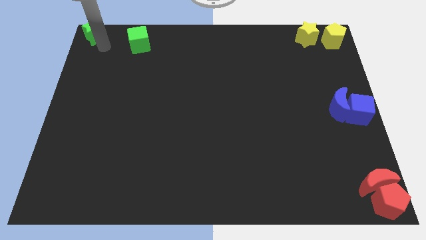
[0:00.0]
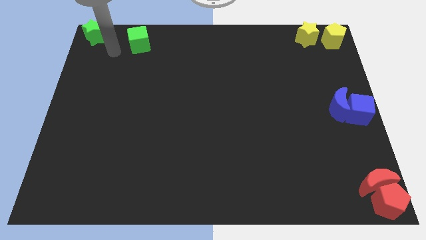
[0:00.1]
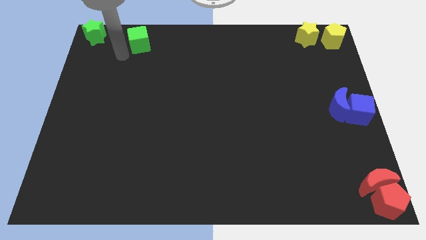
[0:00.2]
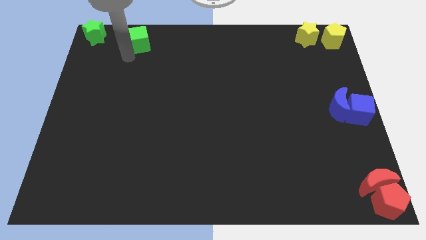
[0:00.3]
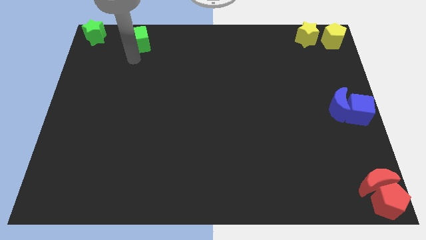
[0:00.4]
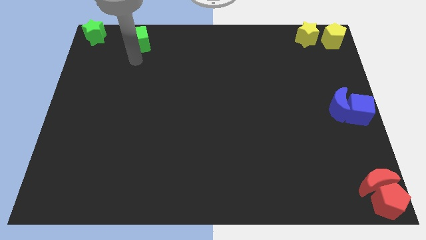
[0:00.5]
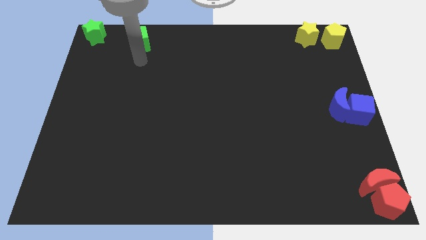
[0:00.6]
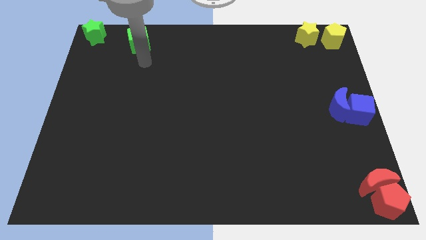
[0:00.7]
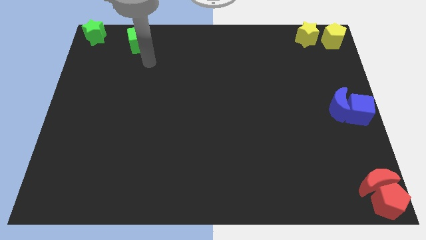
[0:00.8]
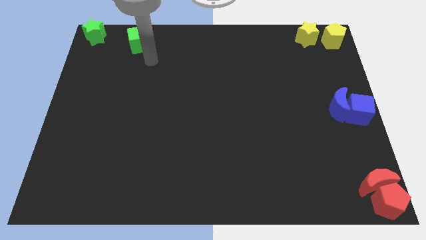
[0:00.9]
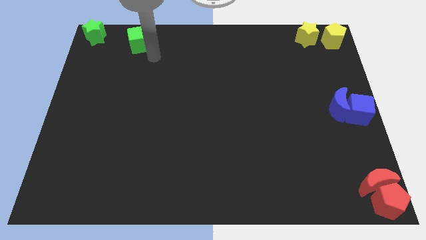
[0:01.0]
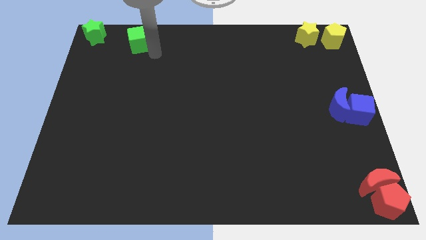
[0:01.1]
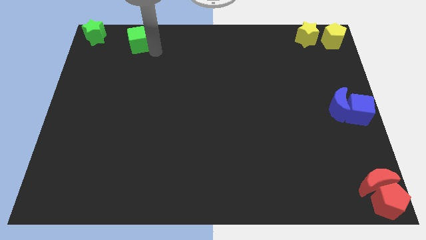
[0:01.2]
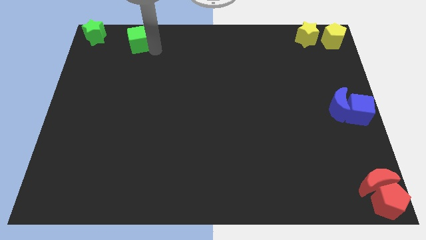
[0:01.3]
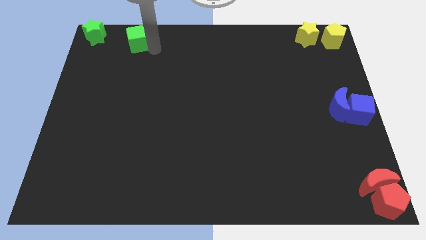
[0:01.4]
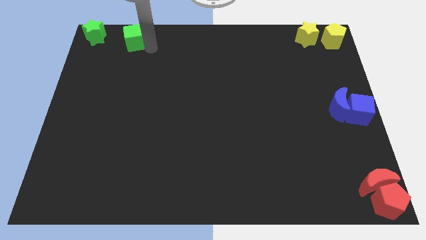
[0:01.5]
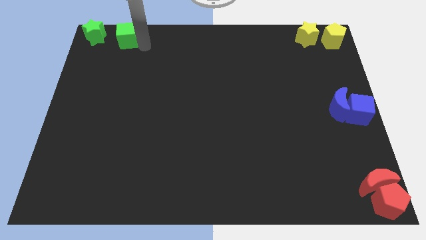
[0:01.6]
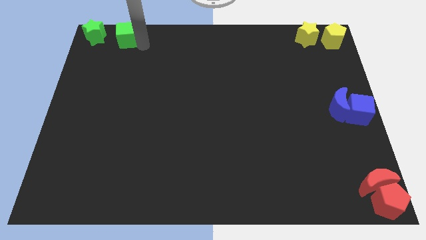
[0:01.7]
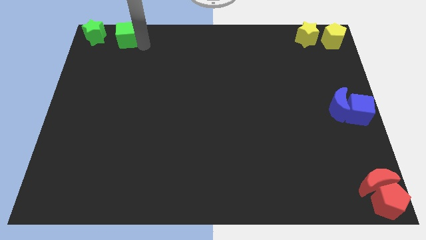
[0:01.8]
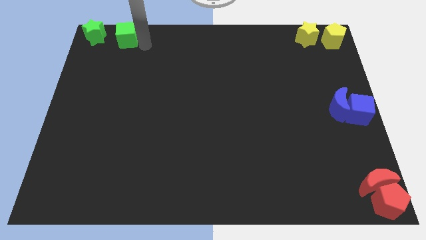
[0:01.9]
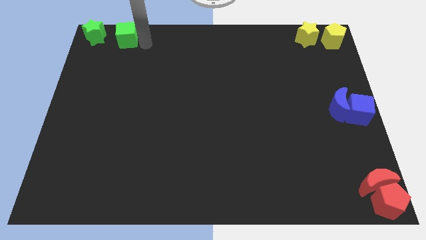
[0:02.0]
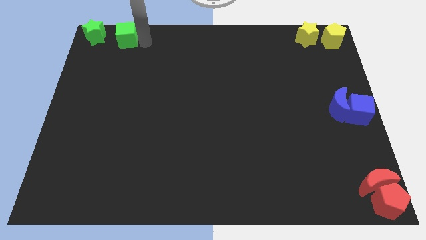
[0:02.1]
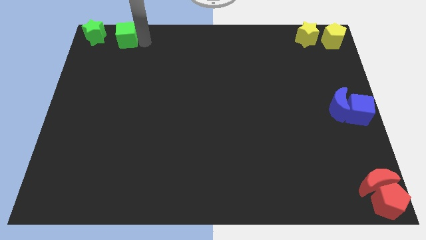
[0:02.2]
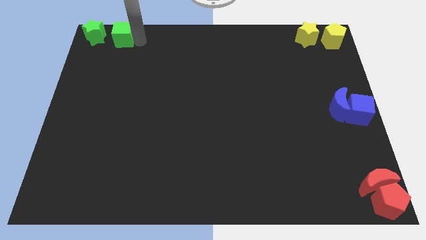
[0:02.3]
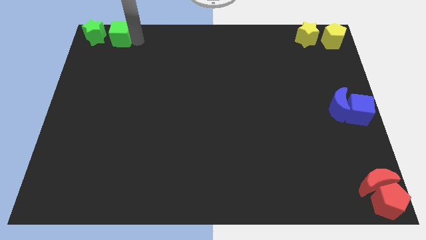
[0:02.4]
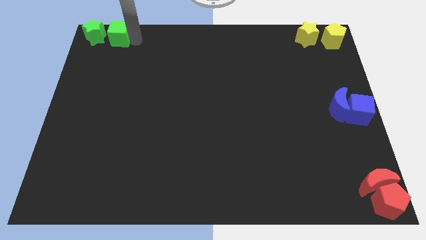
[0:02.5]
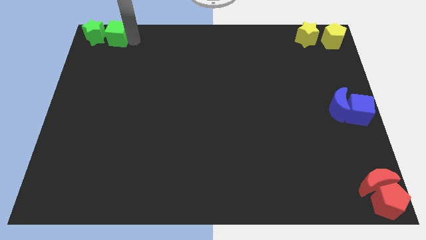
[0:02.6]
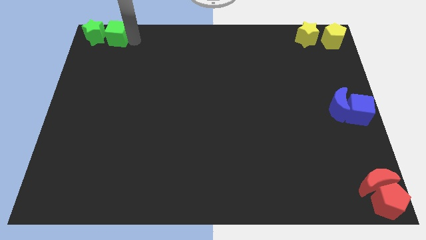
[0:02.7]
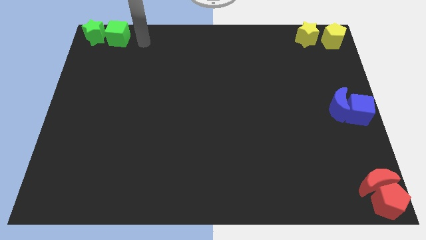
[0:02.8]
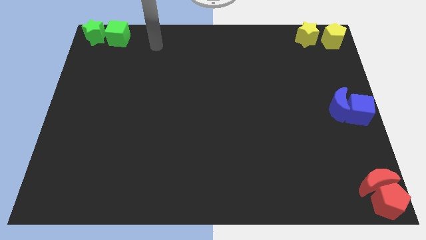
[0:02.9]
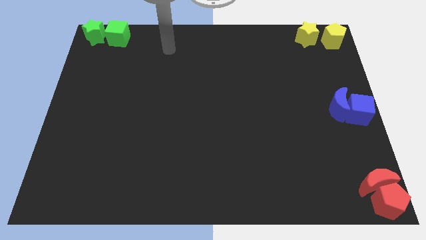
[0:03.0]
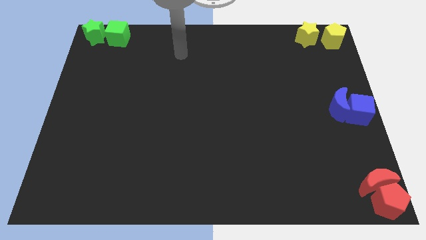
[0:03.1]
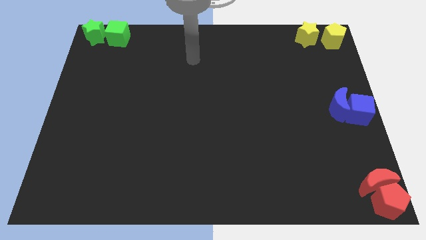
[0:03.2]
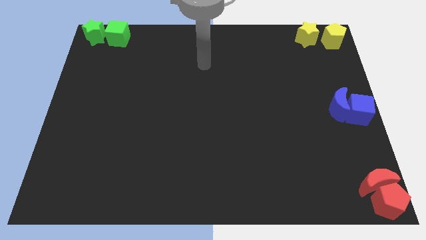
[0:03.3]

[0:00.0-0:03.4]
move the green cube towards right of the green star

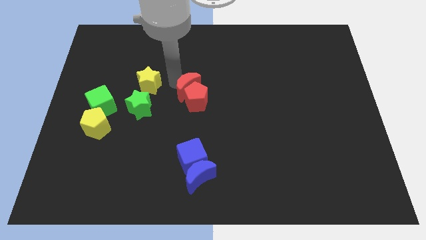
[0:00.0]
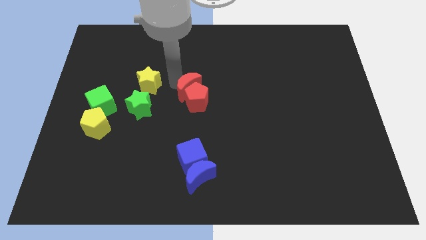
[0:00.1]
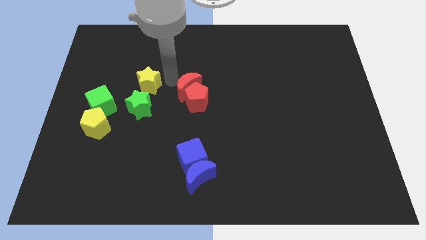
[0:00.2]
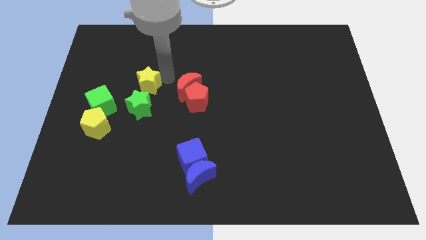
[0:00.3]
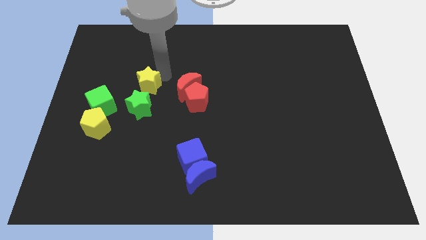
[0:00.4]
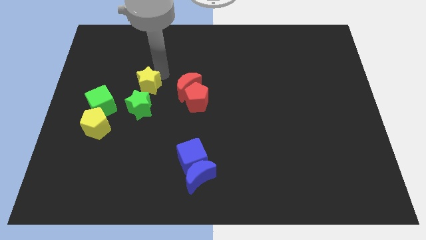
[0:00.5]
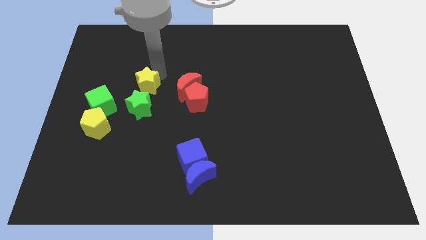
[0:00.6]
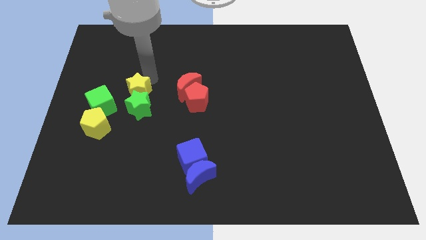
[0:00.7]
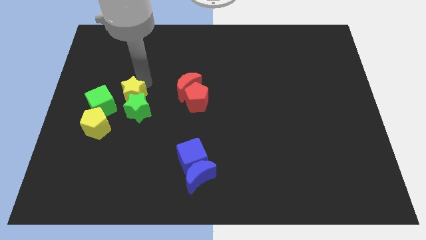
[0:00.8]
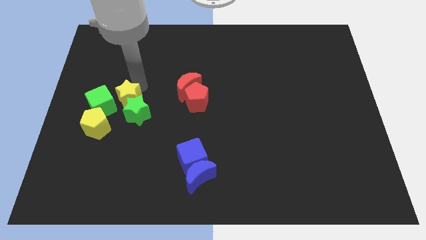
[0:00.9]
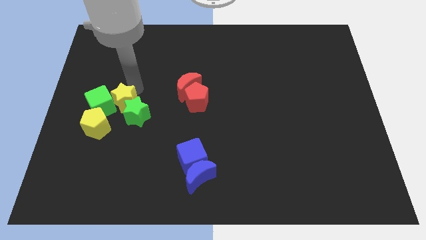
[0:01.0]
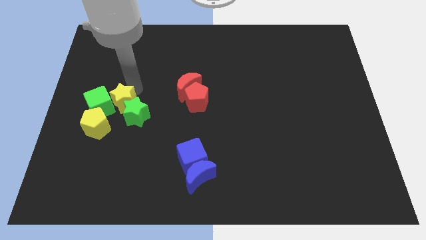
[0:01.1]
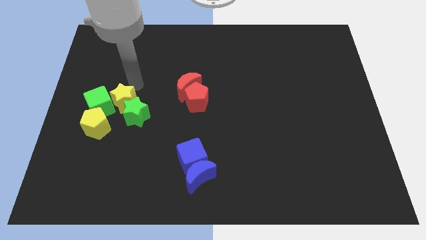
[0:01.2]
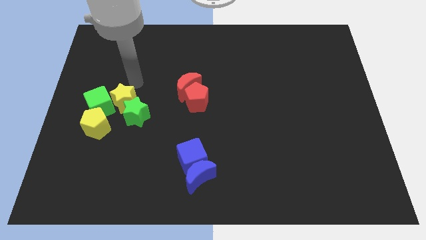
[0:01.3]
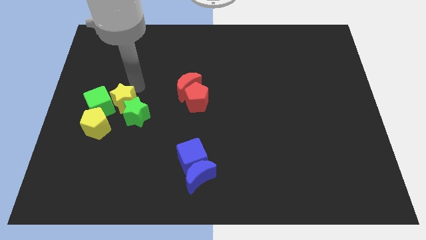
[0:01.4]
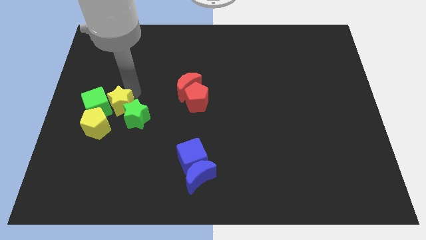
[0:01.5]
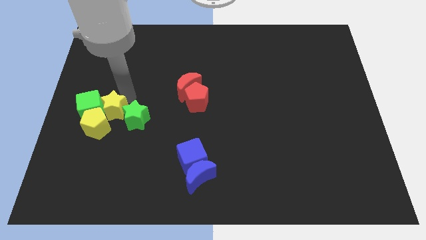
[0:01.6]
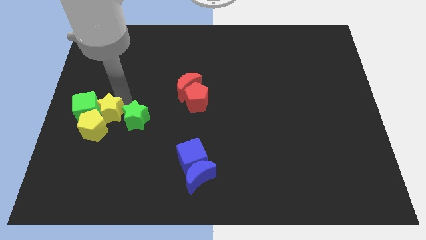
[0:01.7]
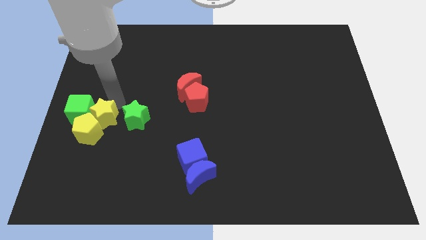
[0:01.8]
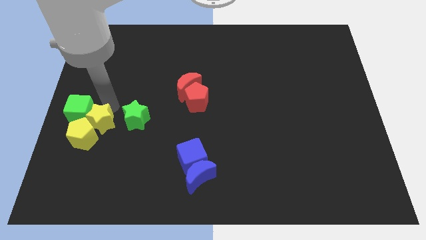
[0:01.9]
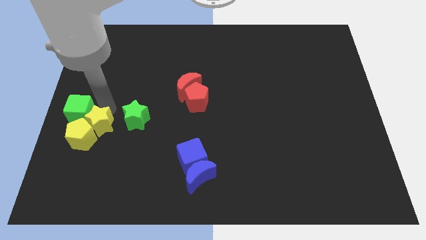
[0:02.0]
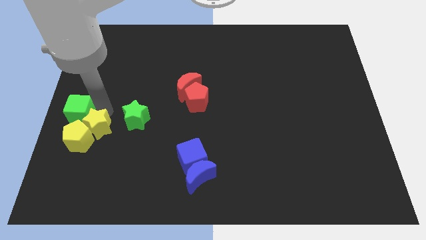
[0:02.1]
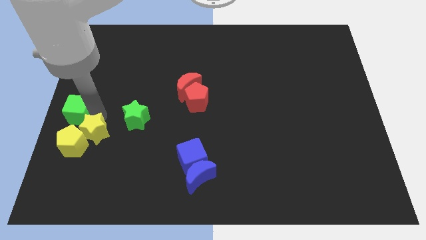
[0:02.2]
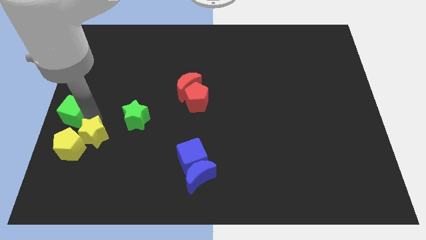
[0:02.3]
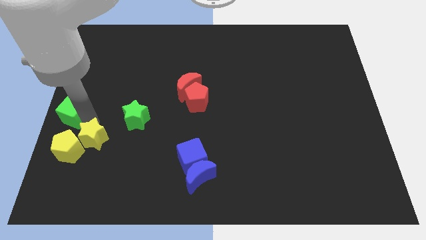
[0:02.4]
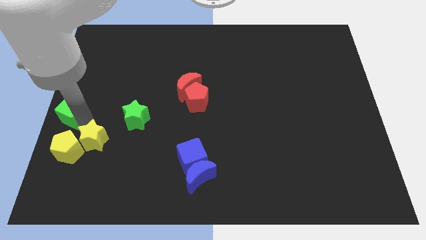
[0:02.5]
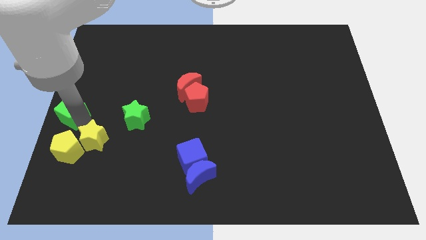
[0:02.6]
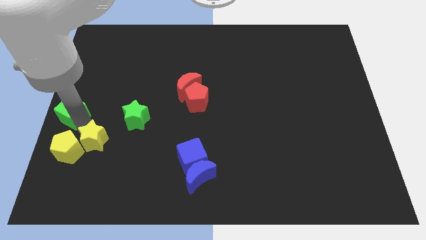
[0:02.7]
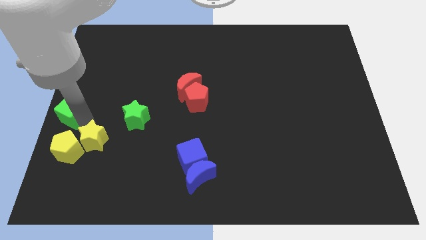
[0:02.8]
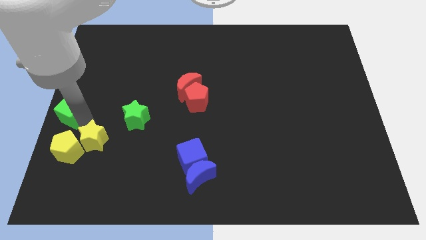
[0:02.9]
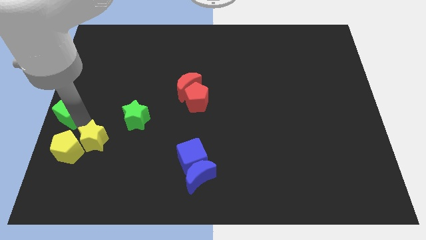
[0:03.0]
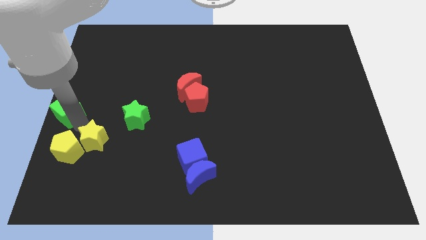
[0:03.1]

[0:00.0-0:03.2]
push the yellow star into the yellow pentagon

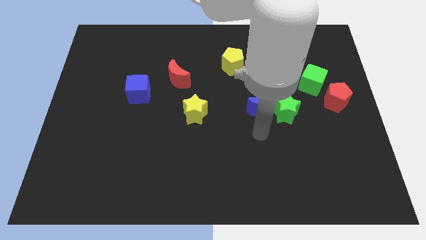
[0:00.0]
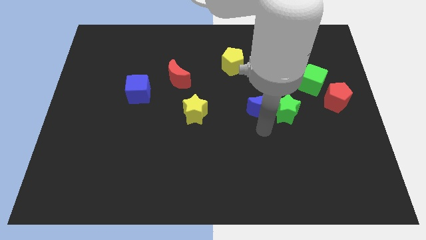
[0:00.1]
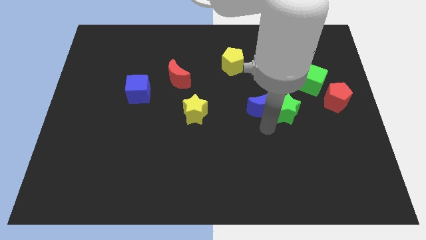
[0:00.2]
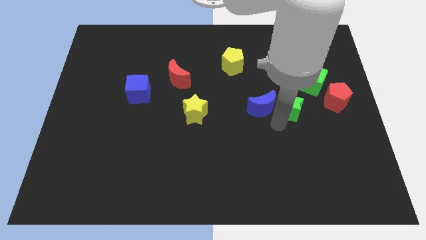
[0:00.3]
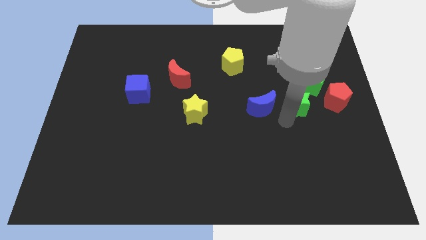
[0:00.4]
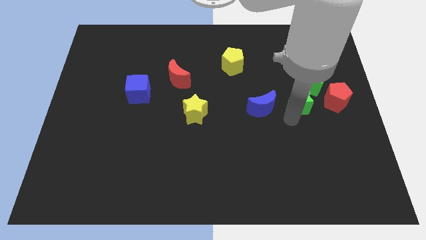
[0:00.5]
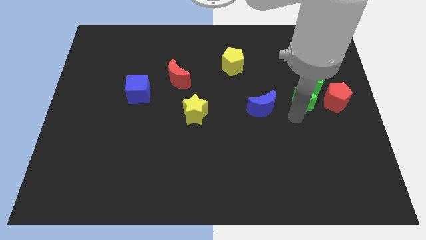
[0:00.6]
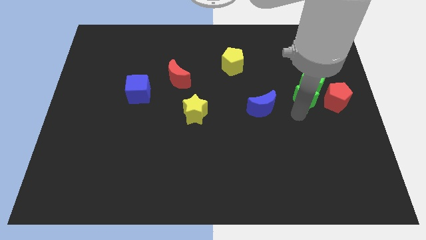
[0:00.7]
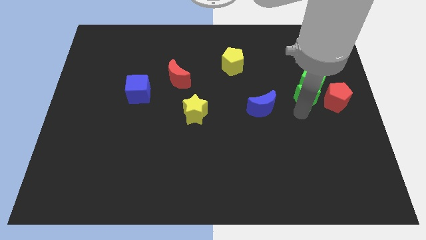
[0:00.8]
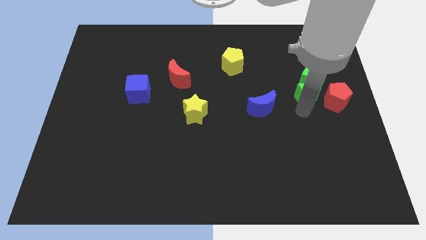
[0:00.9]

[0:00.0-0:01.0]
put the green star in between the blue crescent and red pentagon

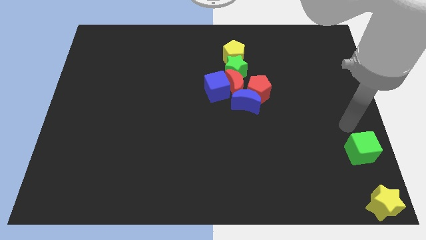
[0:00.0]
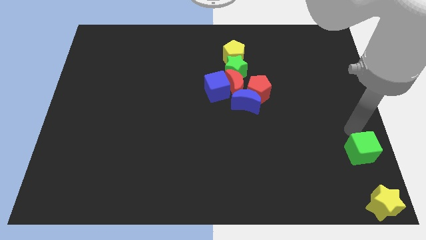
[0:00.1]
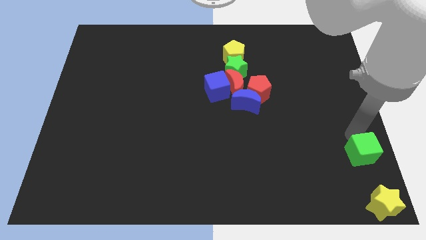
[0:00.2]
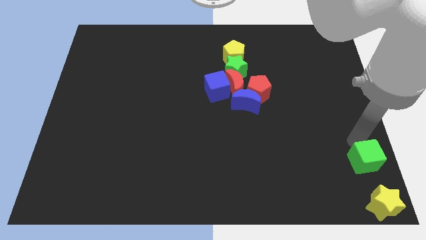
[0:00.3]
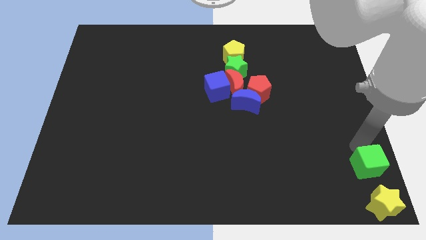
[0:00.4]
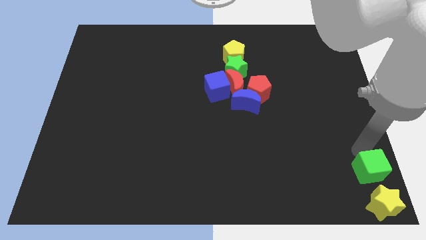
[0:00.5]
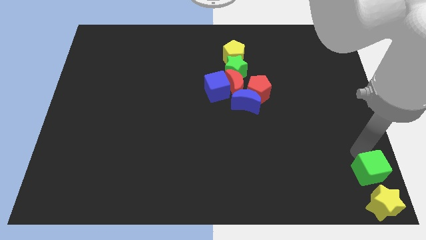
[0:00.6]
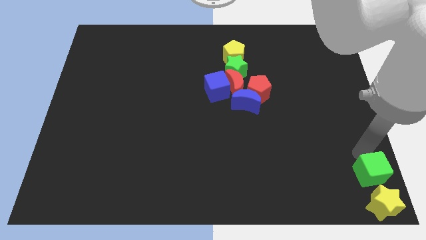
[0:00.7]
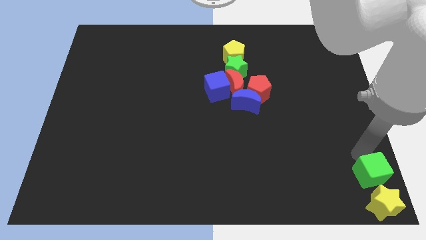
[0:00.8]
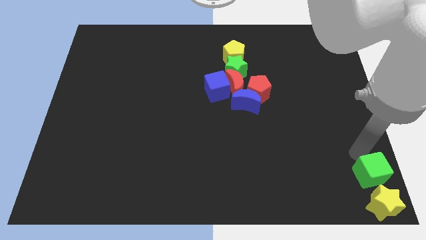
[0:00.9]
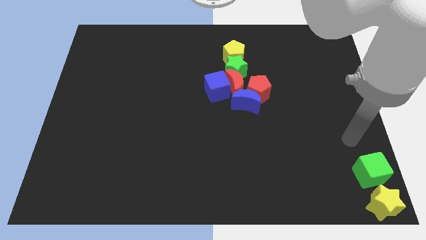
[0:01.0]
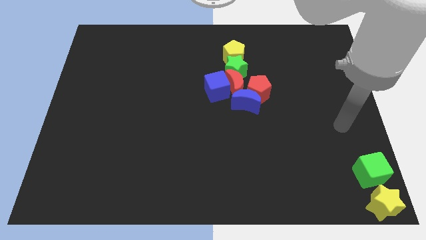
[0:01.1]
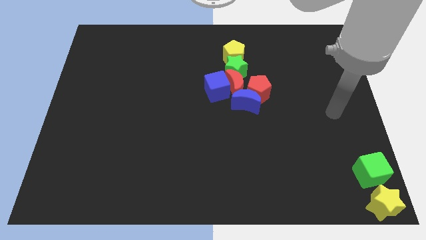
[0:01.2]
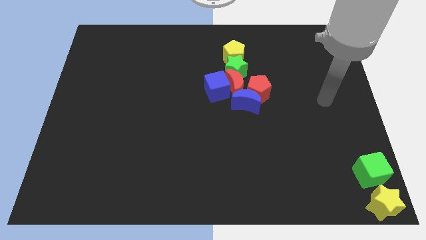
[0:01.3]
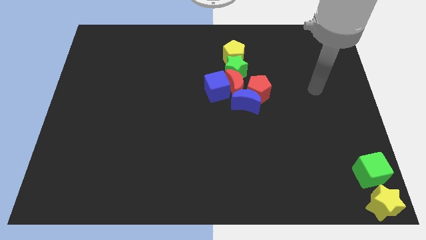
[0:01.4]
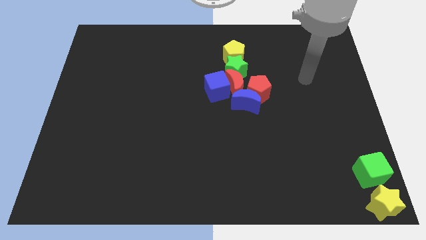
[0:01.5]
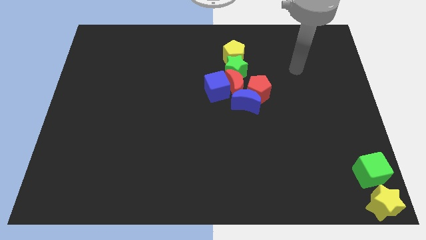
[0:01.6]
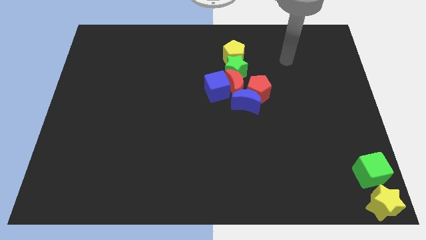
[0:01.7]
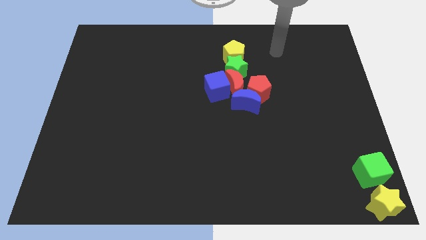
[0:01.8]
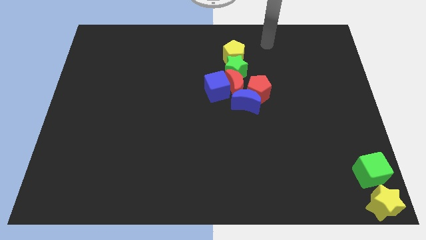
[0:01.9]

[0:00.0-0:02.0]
move the green cube to the top of the yellow star
